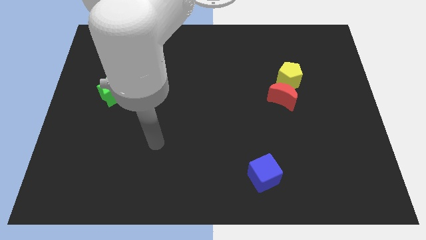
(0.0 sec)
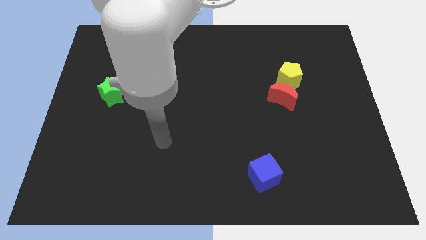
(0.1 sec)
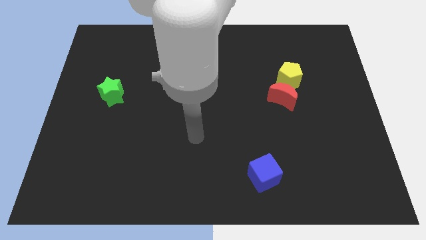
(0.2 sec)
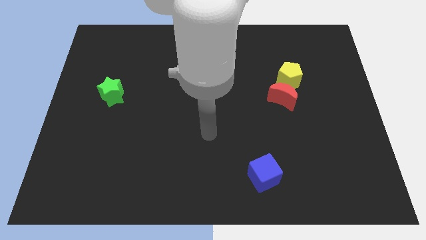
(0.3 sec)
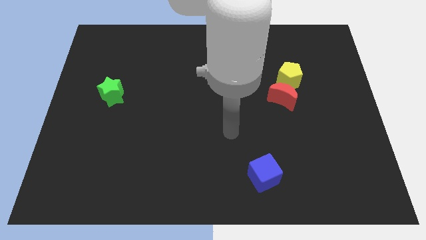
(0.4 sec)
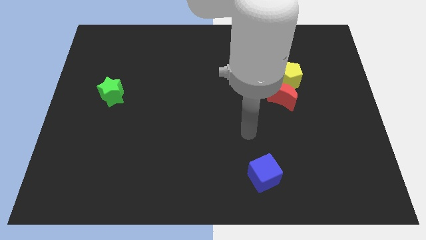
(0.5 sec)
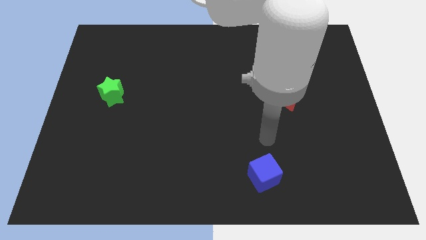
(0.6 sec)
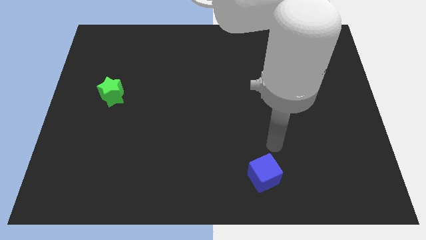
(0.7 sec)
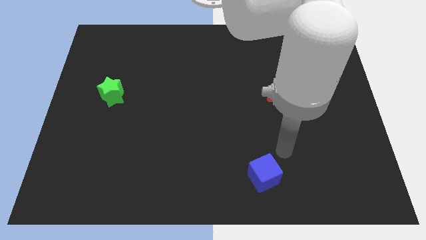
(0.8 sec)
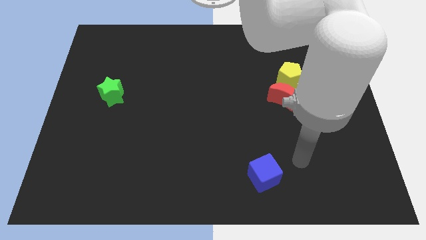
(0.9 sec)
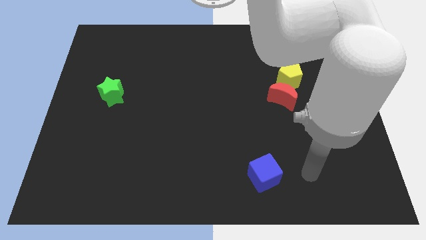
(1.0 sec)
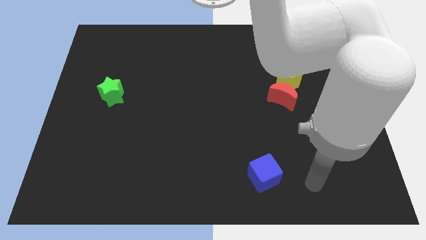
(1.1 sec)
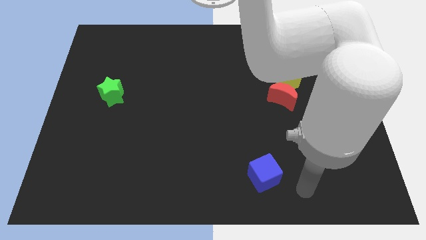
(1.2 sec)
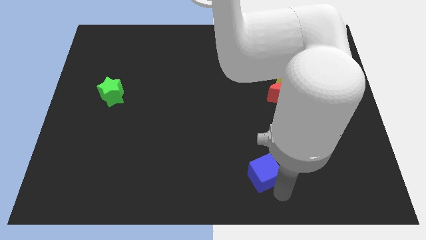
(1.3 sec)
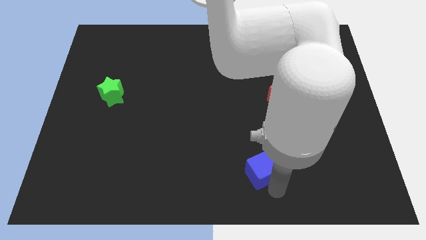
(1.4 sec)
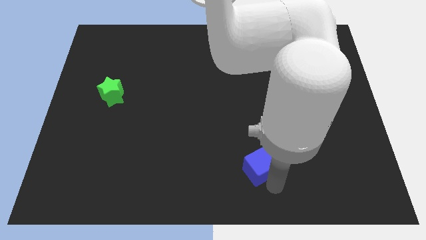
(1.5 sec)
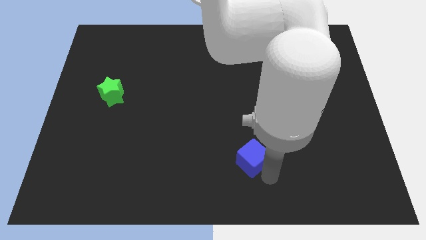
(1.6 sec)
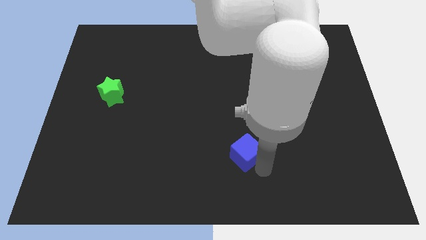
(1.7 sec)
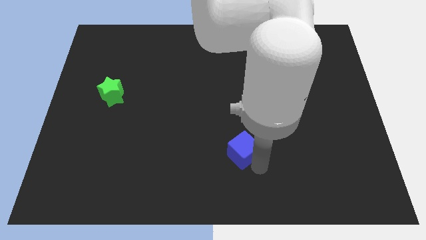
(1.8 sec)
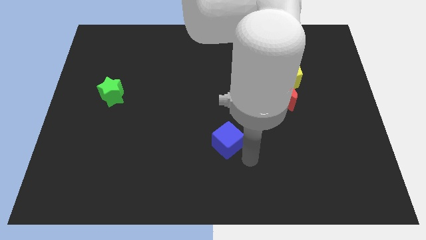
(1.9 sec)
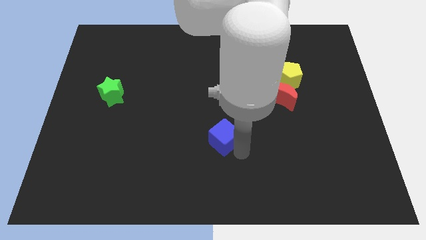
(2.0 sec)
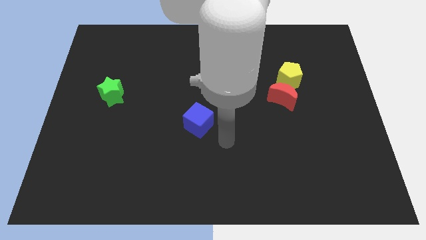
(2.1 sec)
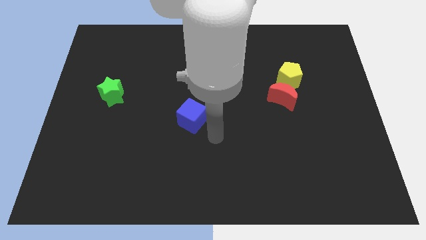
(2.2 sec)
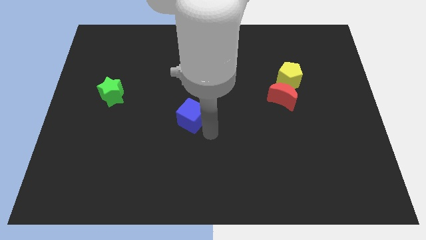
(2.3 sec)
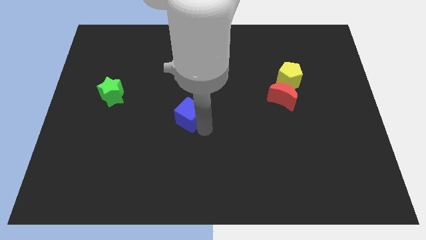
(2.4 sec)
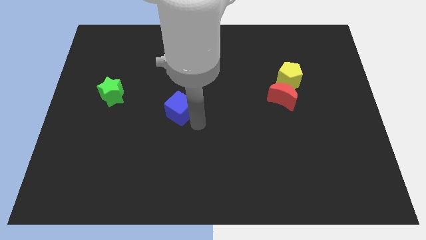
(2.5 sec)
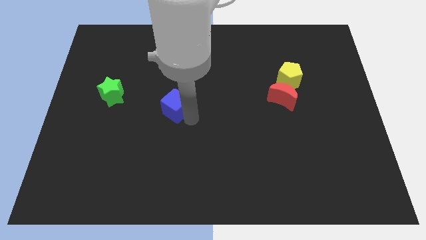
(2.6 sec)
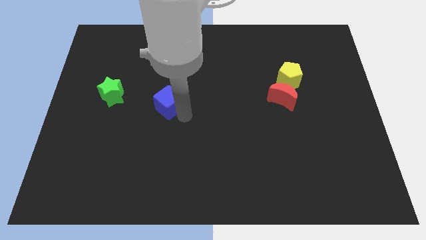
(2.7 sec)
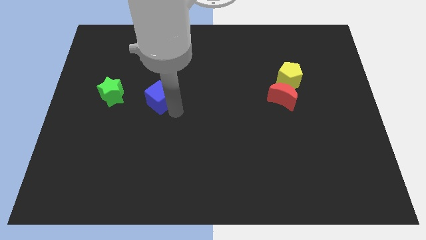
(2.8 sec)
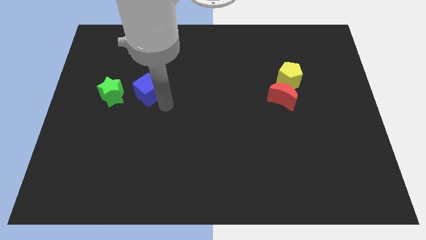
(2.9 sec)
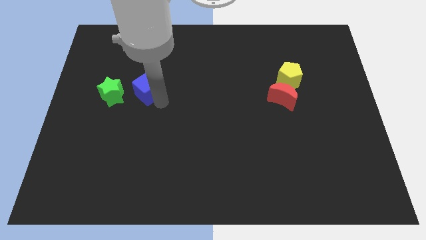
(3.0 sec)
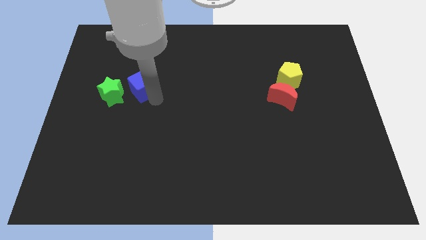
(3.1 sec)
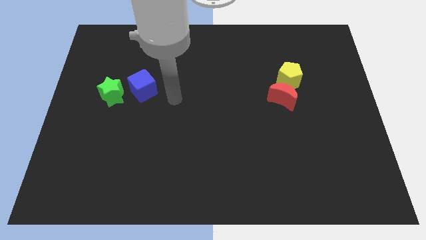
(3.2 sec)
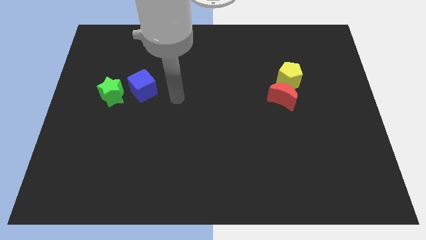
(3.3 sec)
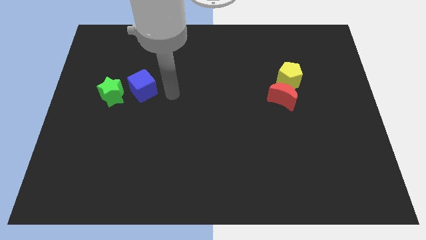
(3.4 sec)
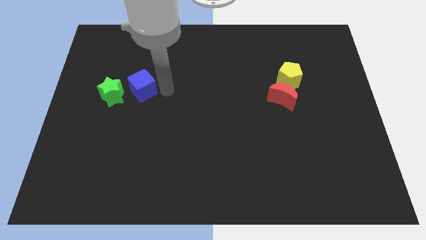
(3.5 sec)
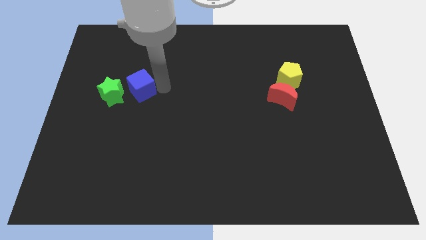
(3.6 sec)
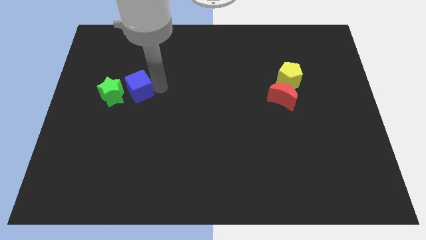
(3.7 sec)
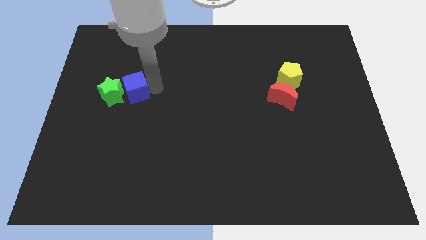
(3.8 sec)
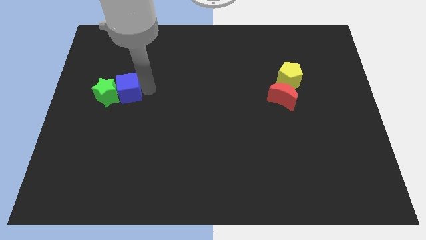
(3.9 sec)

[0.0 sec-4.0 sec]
slide the blue block close to the green star

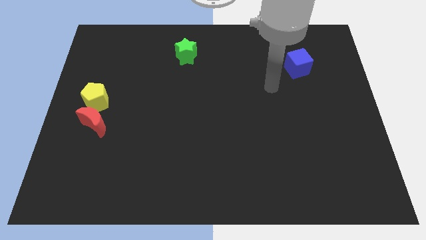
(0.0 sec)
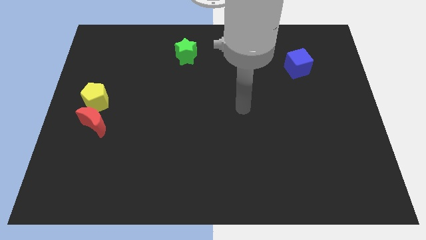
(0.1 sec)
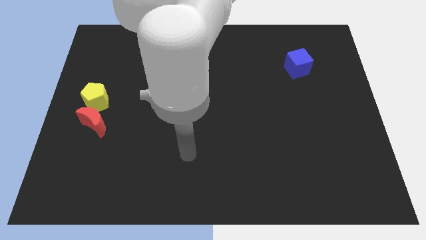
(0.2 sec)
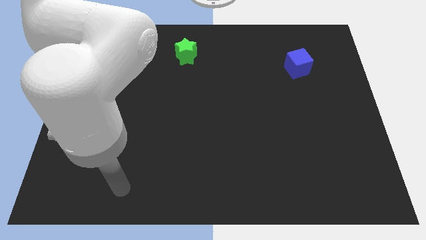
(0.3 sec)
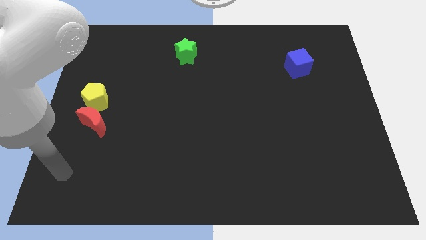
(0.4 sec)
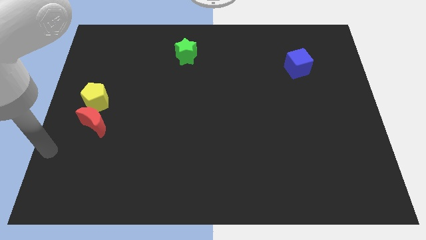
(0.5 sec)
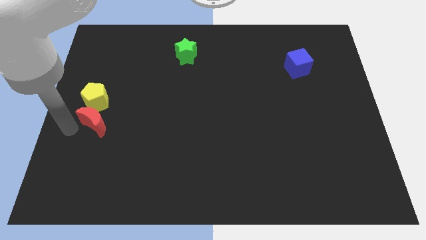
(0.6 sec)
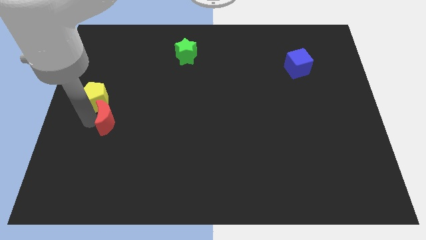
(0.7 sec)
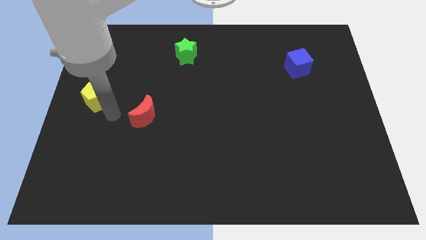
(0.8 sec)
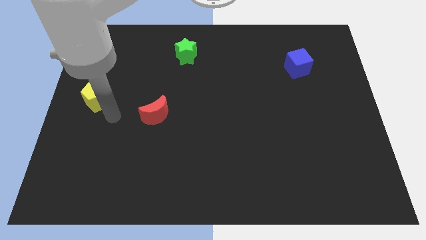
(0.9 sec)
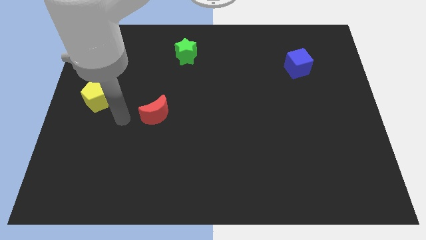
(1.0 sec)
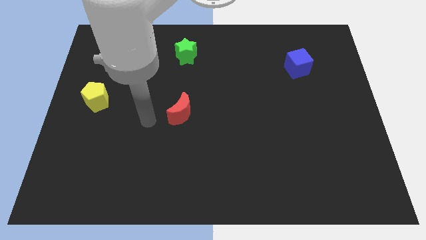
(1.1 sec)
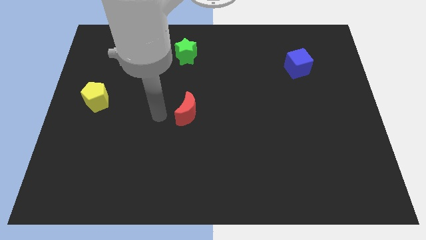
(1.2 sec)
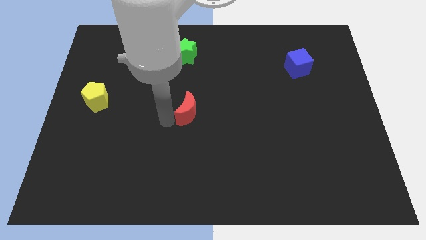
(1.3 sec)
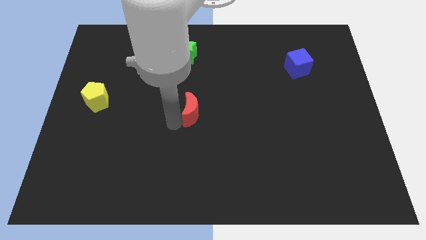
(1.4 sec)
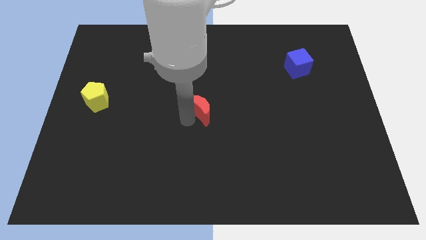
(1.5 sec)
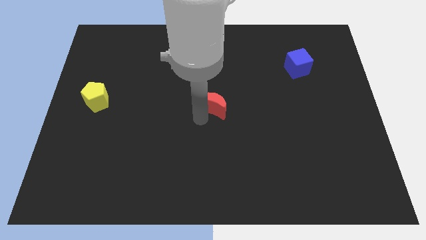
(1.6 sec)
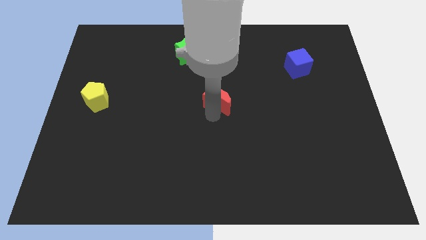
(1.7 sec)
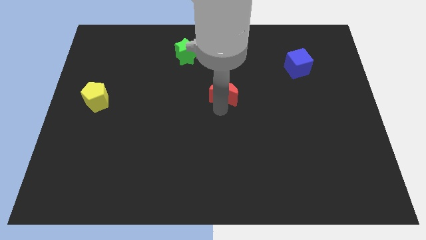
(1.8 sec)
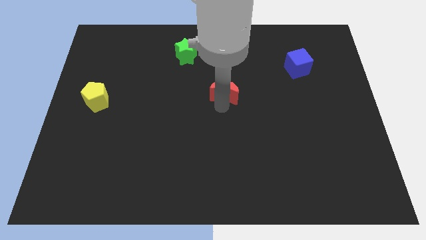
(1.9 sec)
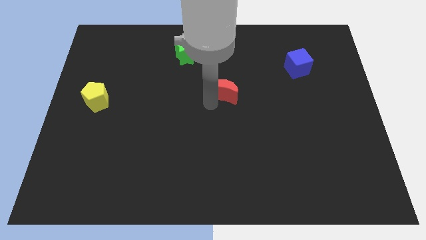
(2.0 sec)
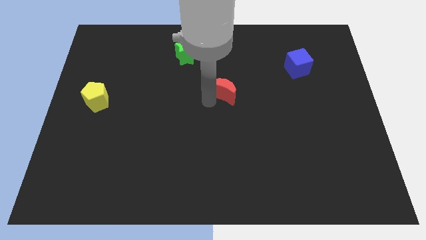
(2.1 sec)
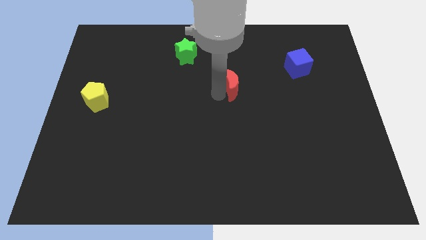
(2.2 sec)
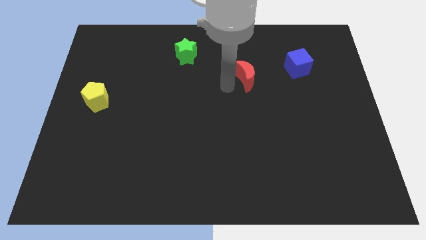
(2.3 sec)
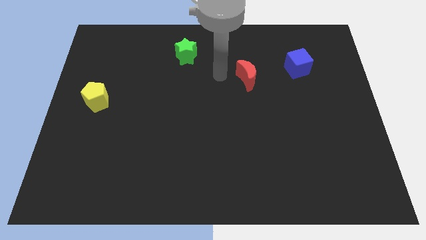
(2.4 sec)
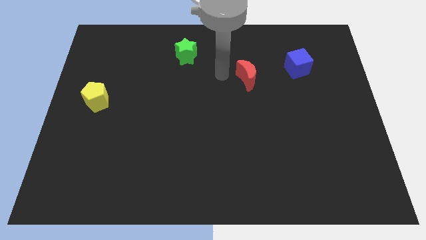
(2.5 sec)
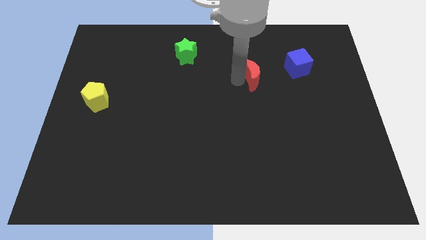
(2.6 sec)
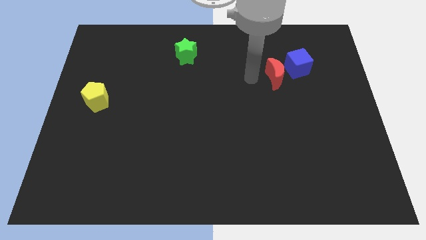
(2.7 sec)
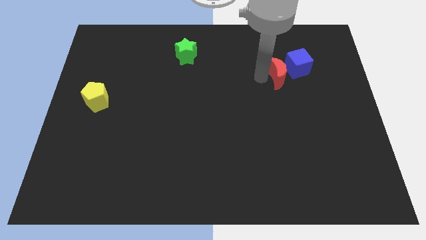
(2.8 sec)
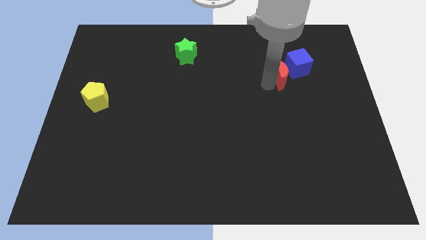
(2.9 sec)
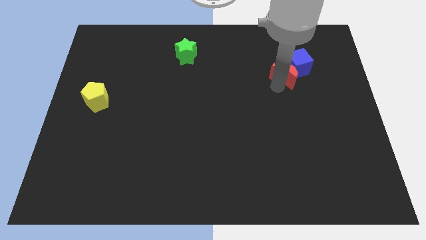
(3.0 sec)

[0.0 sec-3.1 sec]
slide the moon next to the cube

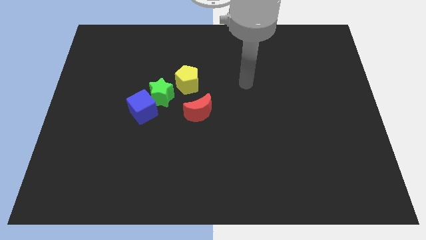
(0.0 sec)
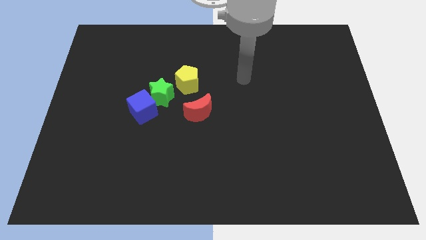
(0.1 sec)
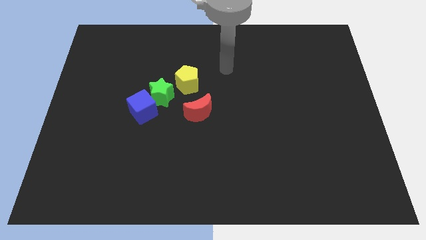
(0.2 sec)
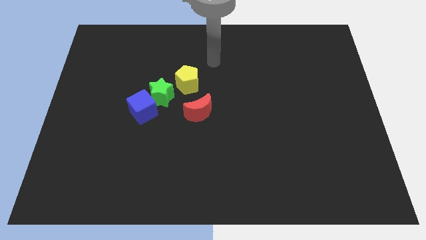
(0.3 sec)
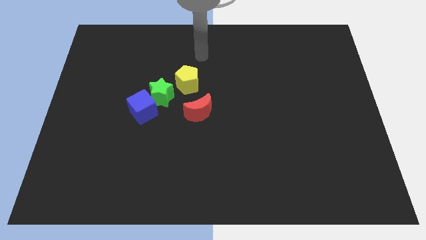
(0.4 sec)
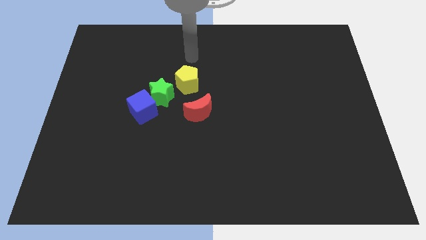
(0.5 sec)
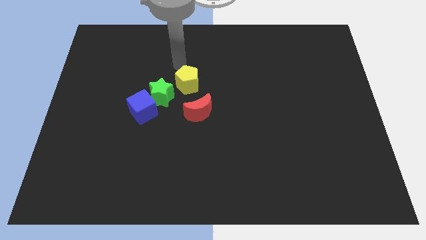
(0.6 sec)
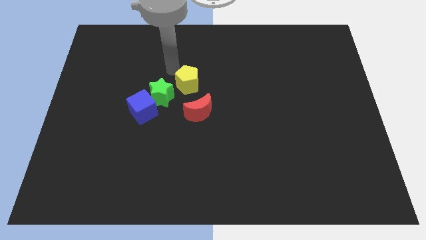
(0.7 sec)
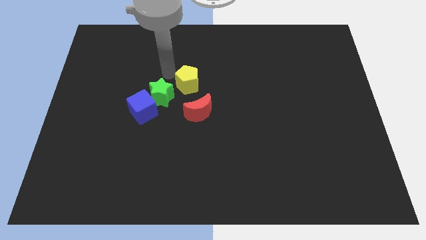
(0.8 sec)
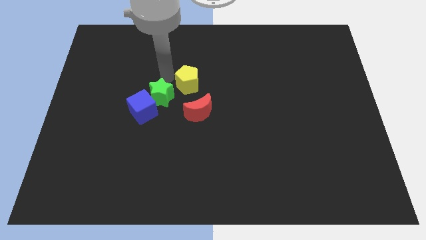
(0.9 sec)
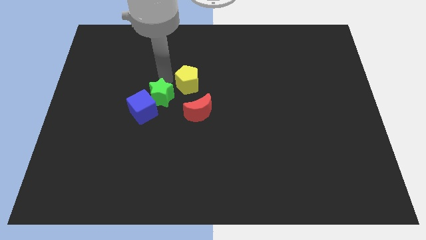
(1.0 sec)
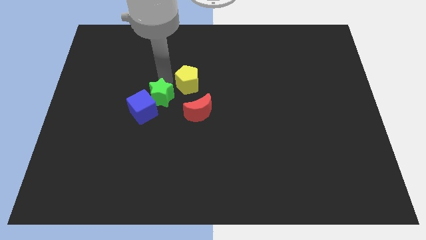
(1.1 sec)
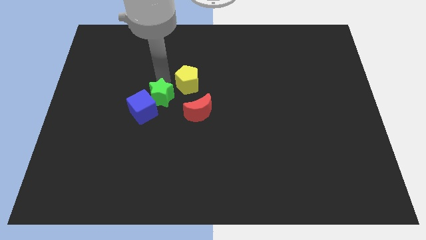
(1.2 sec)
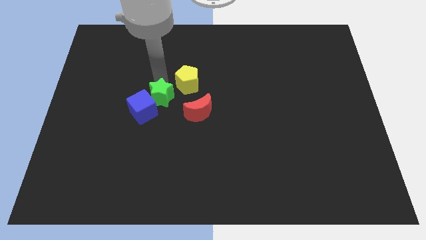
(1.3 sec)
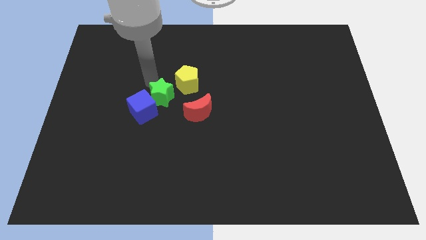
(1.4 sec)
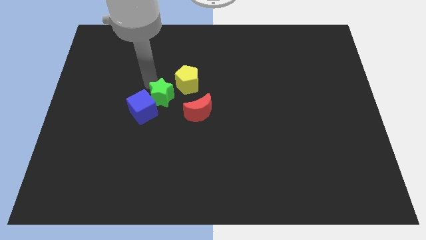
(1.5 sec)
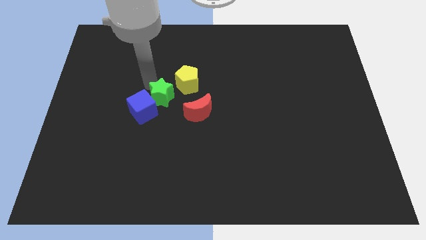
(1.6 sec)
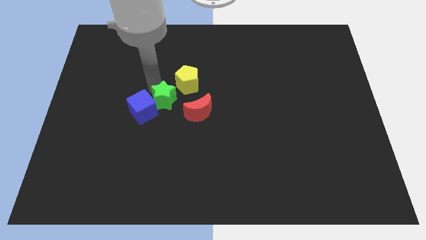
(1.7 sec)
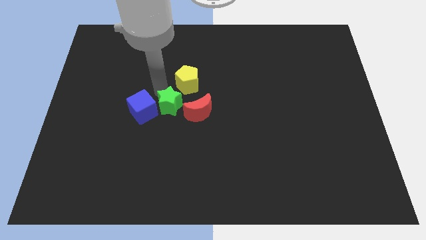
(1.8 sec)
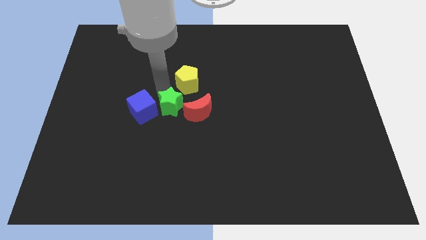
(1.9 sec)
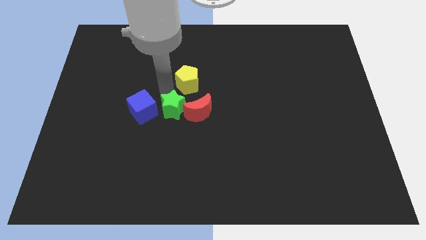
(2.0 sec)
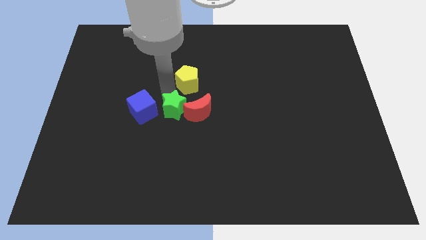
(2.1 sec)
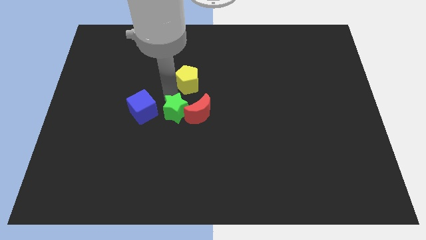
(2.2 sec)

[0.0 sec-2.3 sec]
slide the green star to the moon
